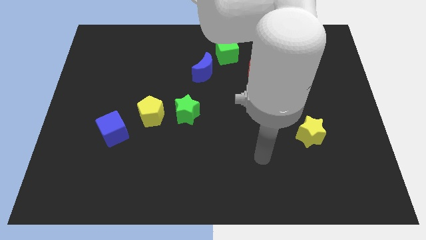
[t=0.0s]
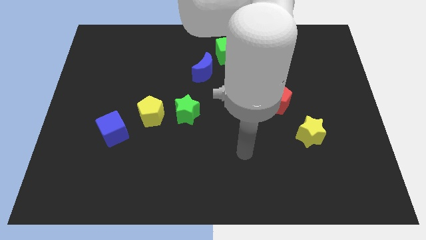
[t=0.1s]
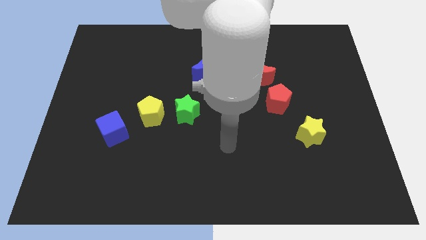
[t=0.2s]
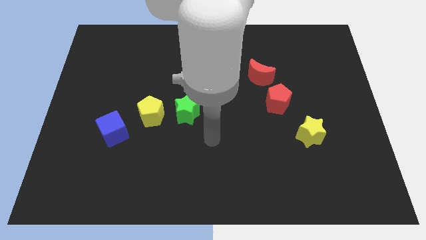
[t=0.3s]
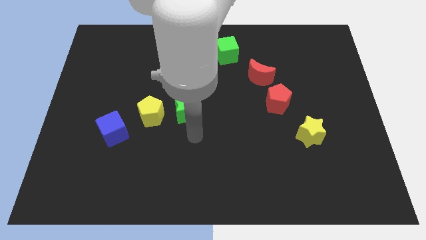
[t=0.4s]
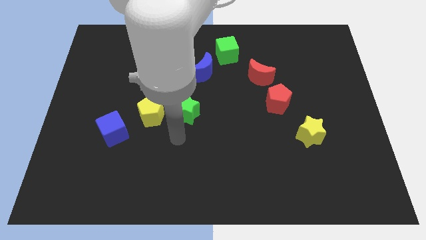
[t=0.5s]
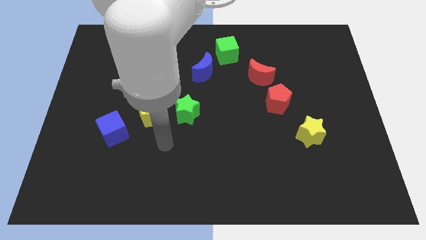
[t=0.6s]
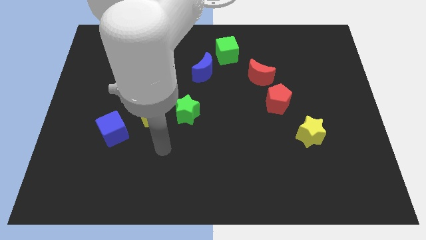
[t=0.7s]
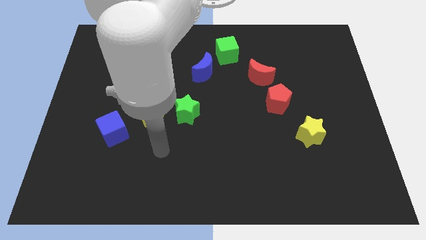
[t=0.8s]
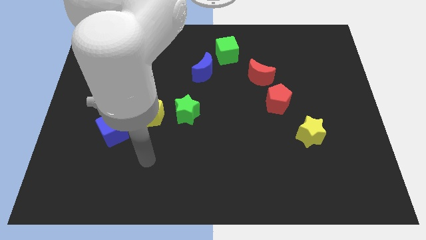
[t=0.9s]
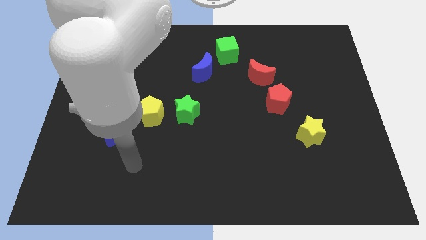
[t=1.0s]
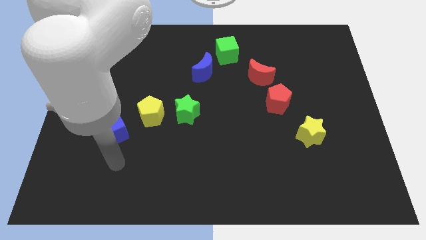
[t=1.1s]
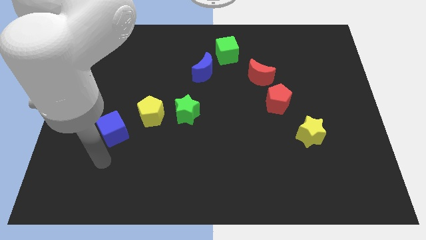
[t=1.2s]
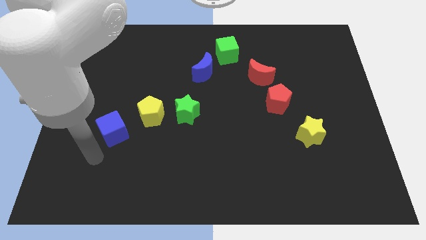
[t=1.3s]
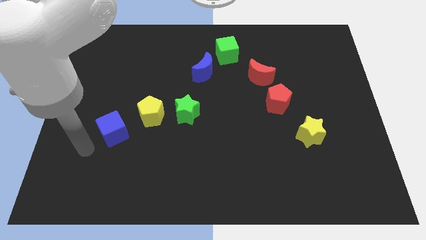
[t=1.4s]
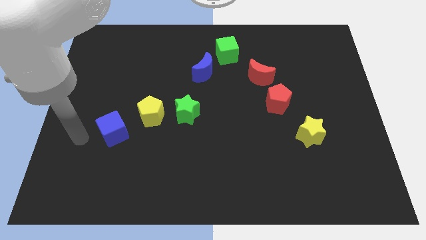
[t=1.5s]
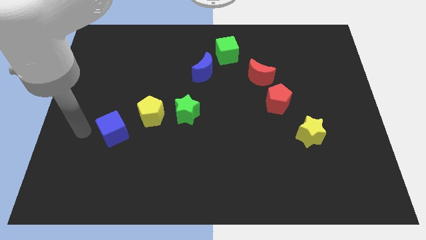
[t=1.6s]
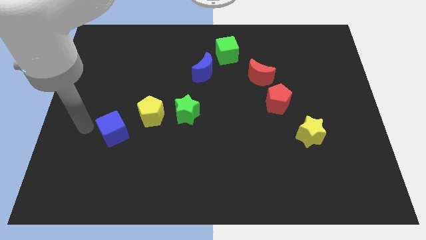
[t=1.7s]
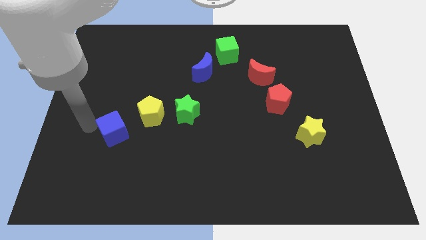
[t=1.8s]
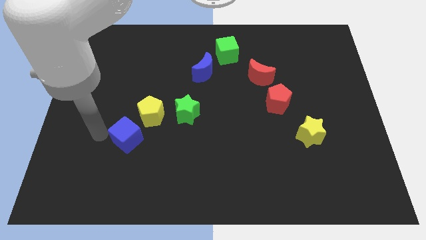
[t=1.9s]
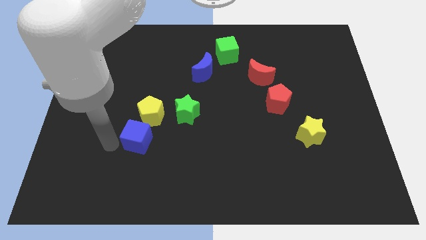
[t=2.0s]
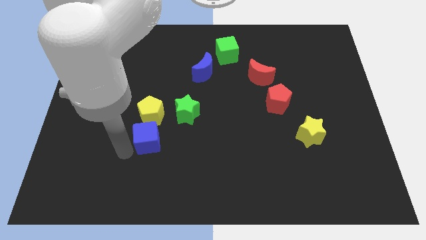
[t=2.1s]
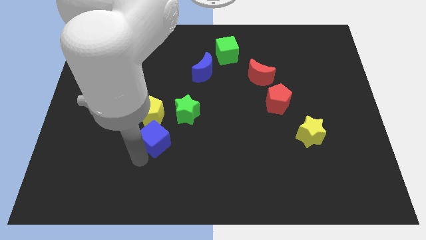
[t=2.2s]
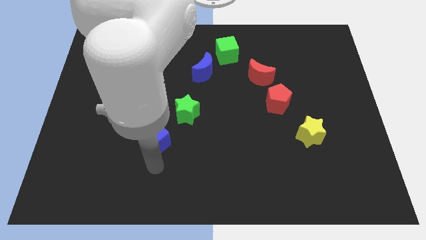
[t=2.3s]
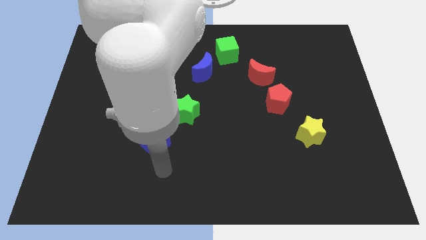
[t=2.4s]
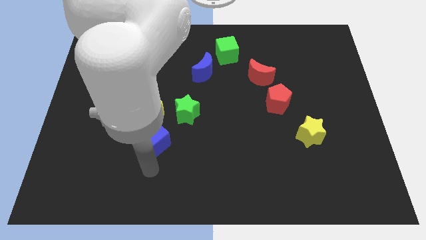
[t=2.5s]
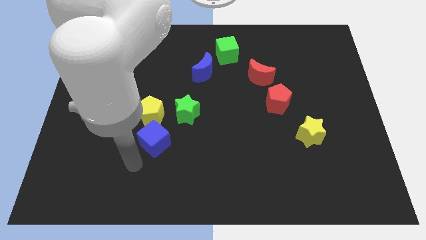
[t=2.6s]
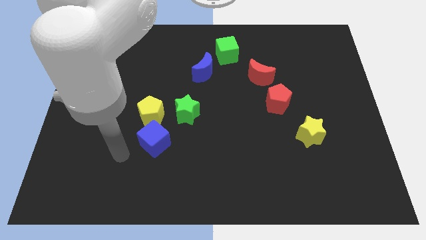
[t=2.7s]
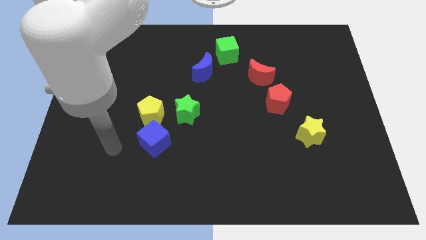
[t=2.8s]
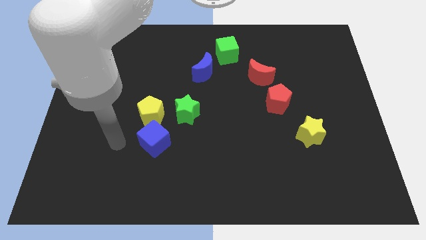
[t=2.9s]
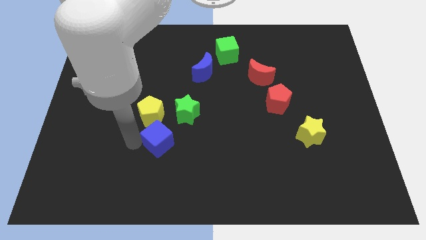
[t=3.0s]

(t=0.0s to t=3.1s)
place blue cube to the bottom of yellow pentagon

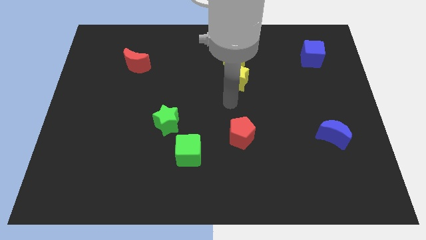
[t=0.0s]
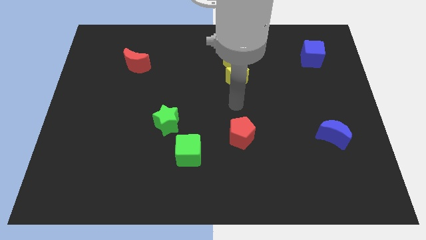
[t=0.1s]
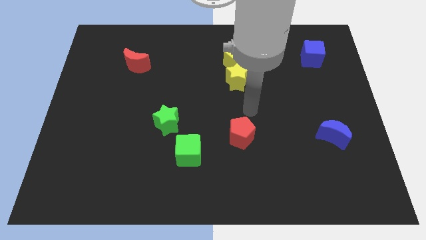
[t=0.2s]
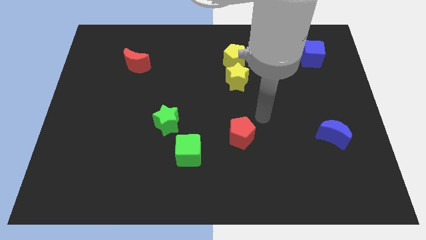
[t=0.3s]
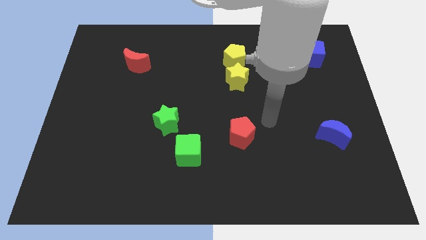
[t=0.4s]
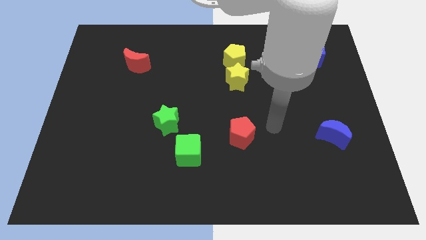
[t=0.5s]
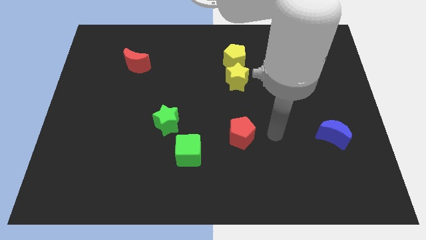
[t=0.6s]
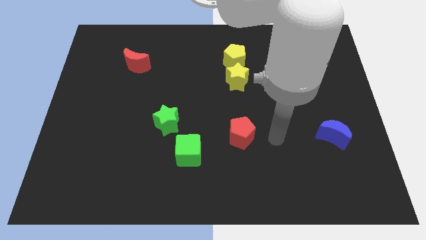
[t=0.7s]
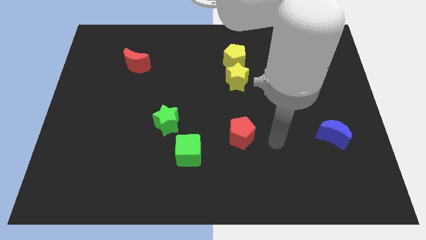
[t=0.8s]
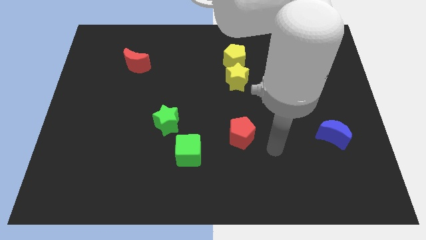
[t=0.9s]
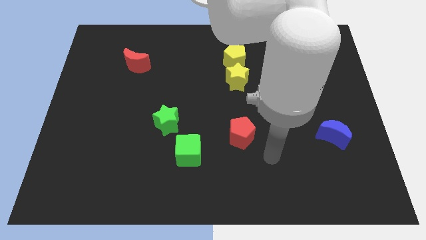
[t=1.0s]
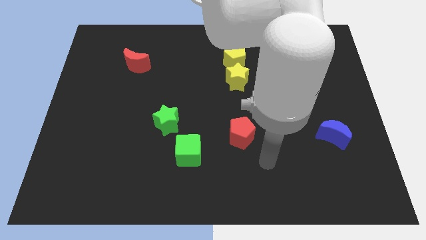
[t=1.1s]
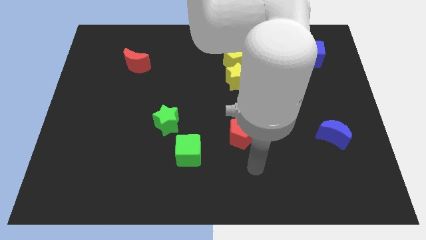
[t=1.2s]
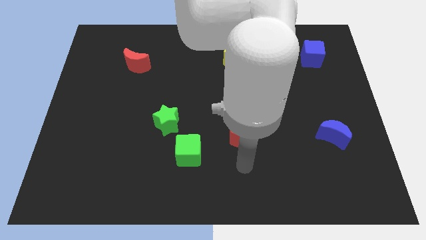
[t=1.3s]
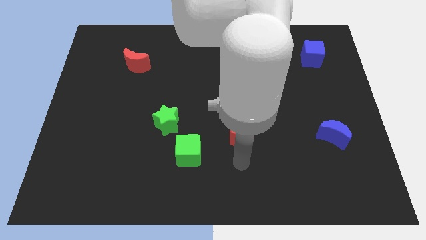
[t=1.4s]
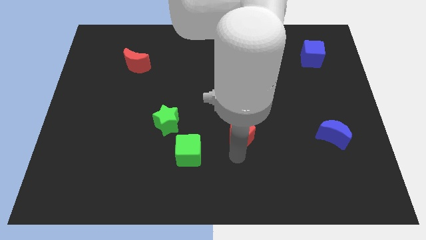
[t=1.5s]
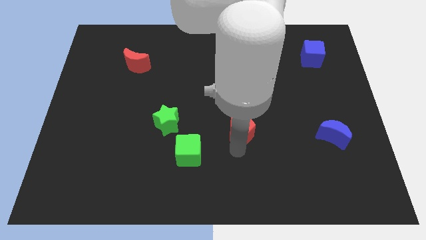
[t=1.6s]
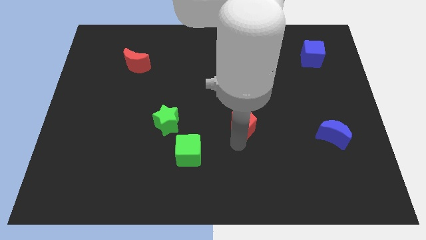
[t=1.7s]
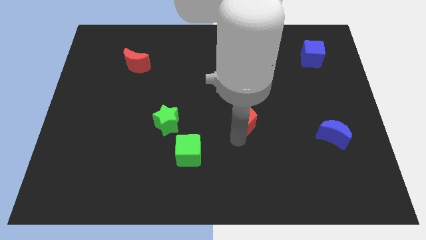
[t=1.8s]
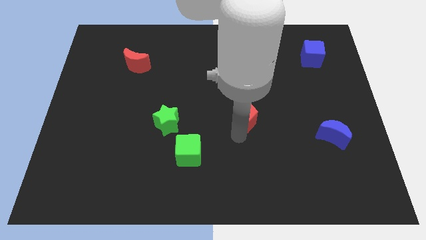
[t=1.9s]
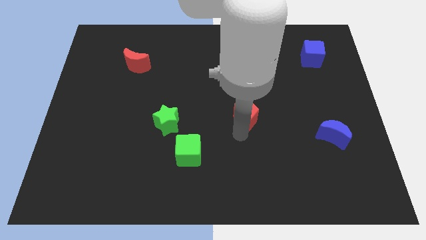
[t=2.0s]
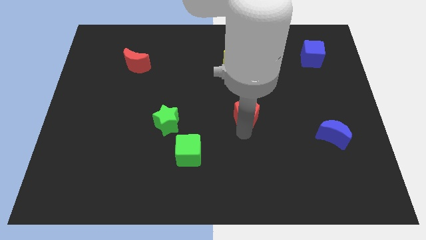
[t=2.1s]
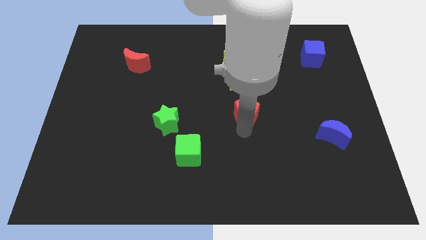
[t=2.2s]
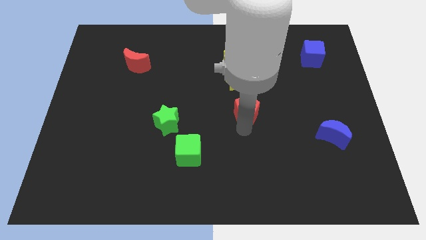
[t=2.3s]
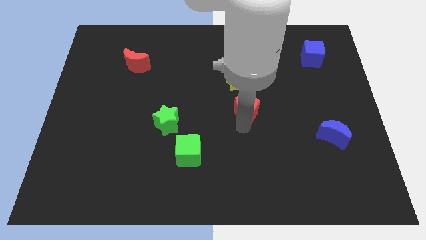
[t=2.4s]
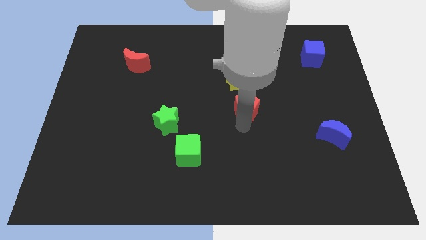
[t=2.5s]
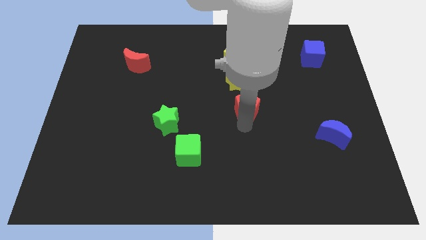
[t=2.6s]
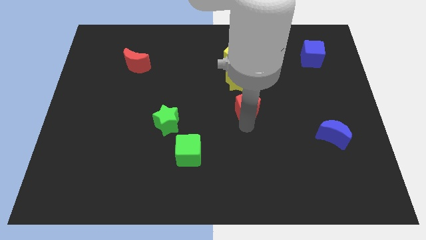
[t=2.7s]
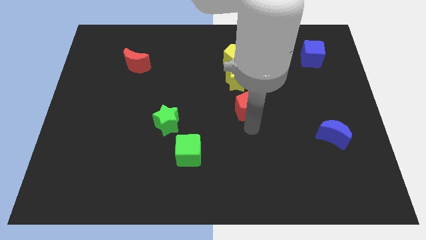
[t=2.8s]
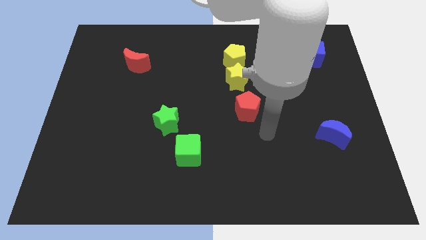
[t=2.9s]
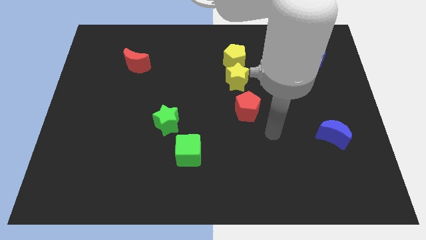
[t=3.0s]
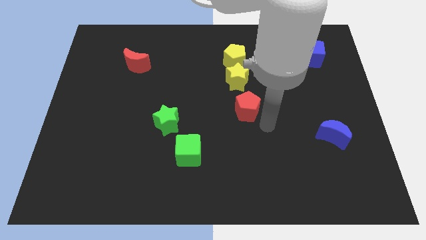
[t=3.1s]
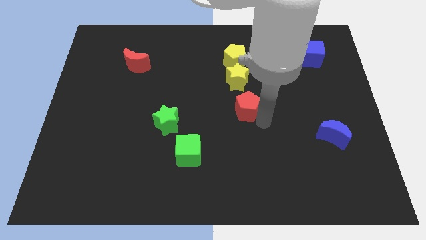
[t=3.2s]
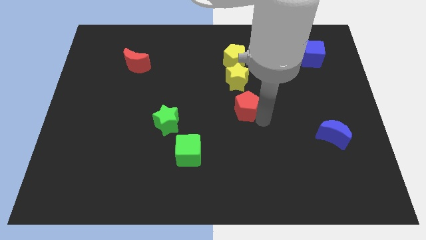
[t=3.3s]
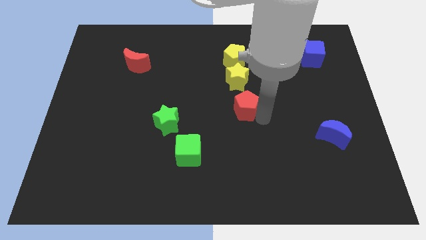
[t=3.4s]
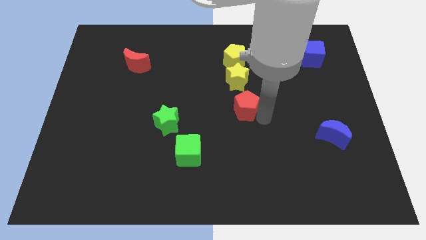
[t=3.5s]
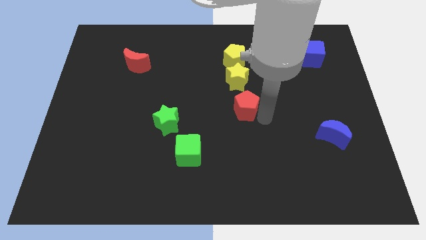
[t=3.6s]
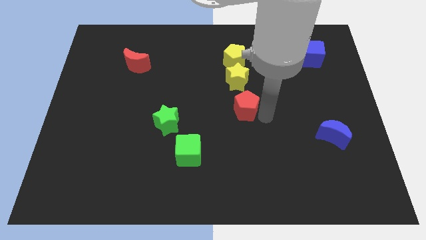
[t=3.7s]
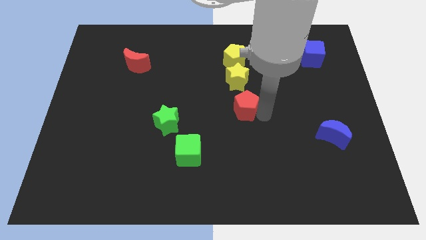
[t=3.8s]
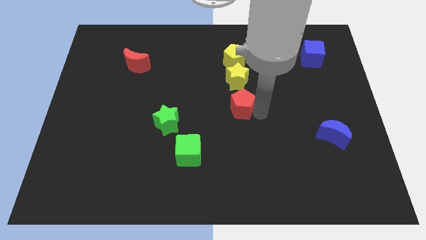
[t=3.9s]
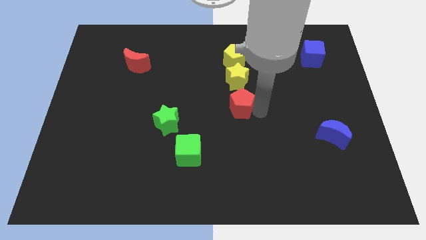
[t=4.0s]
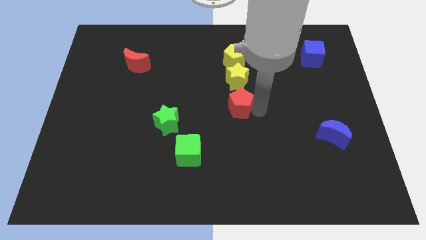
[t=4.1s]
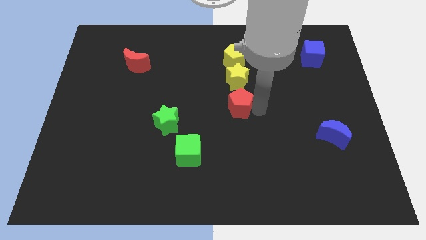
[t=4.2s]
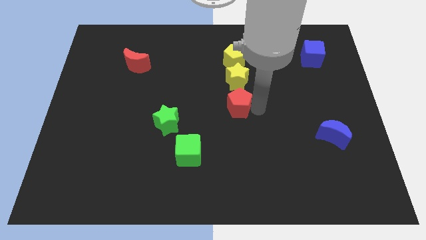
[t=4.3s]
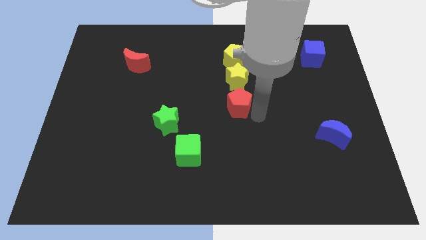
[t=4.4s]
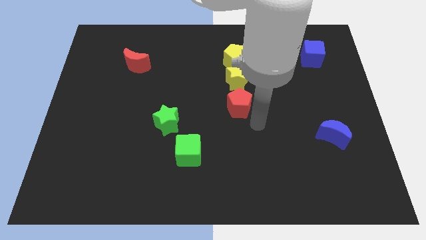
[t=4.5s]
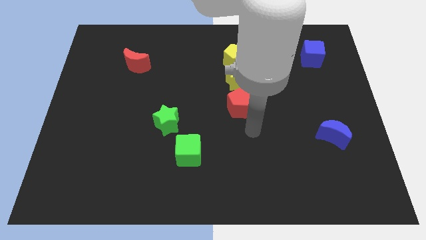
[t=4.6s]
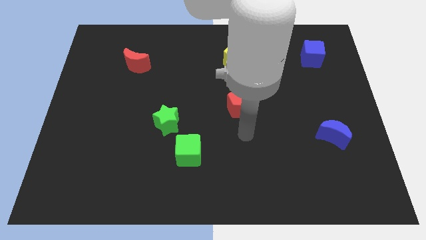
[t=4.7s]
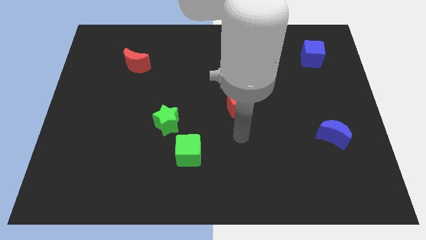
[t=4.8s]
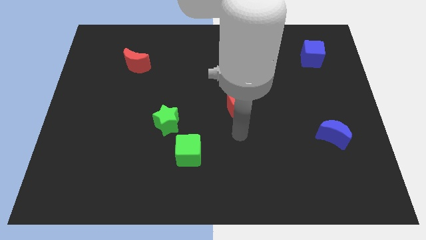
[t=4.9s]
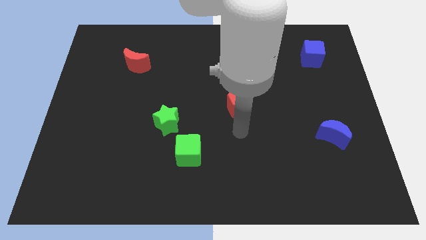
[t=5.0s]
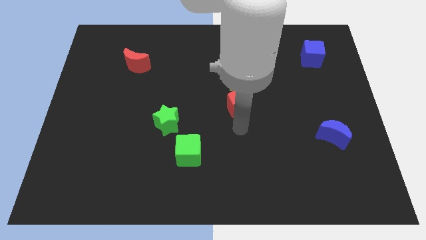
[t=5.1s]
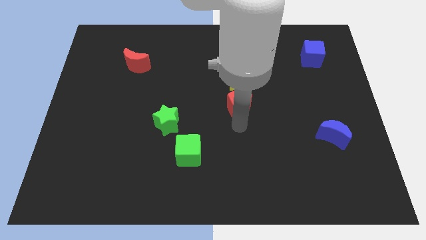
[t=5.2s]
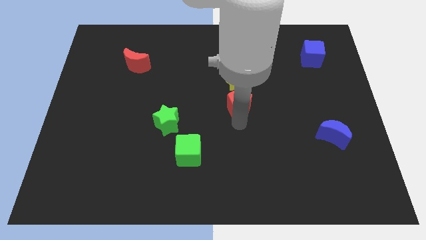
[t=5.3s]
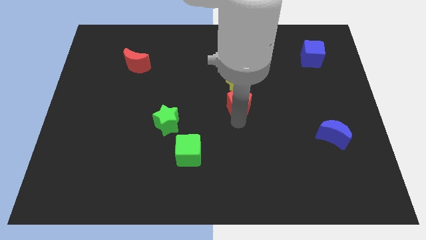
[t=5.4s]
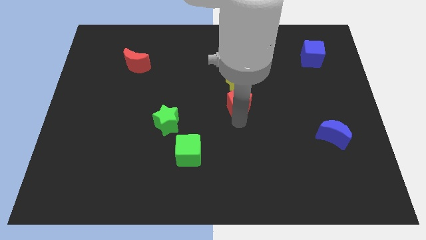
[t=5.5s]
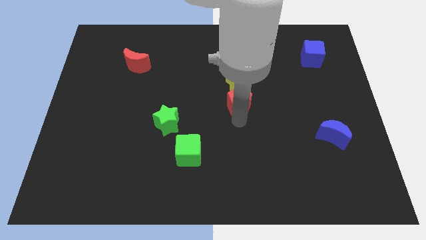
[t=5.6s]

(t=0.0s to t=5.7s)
place the red pentagon below the yellow star

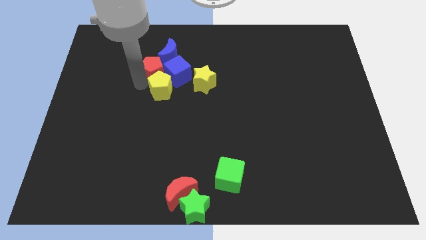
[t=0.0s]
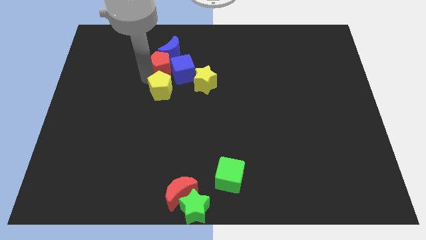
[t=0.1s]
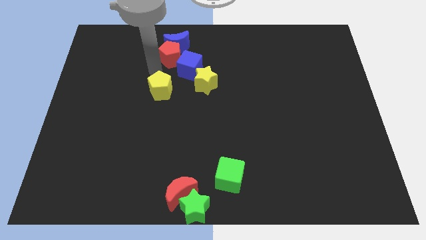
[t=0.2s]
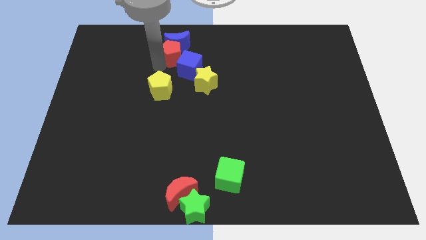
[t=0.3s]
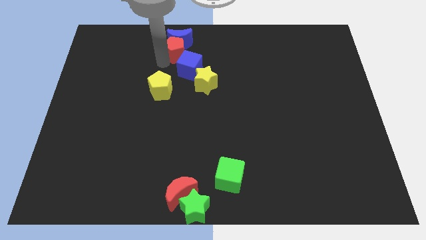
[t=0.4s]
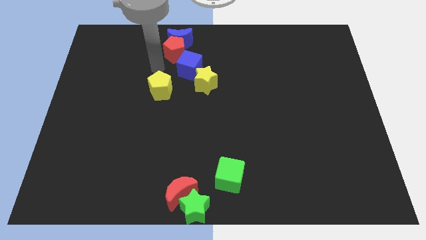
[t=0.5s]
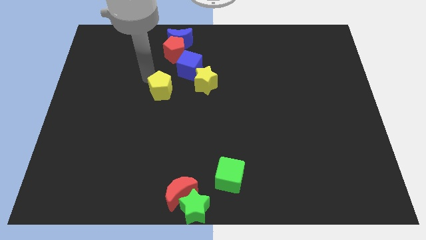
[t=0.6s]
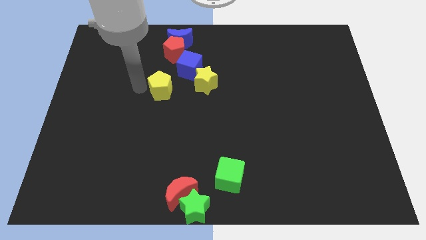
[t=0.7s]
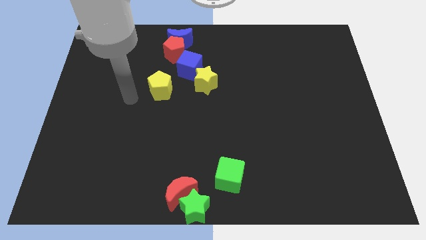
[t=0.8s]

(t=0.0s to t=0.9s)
move the red pentagon below the blue crescent
